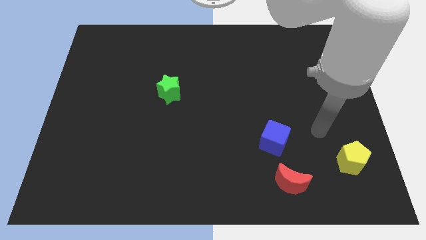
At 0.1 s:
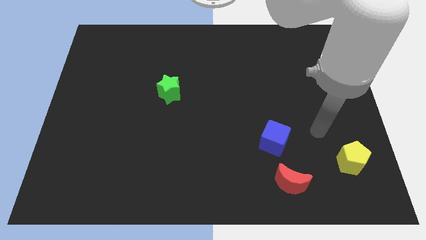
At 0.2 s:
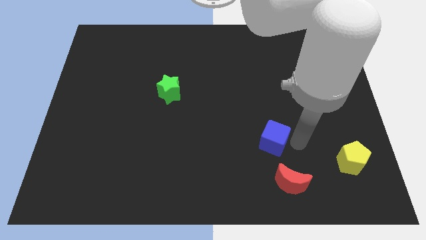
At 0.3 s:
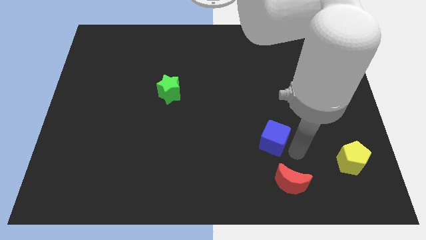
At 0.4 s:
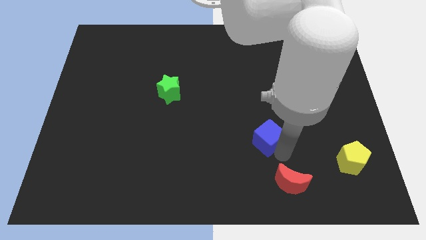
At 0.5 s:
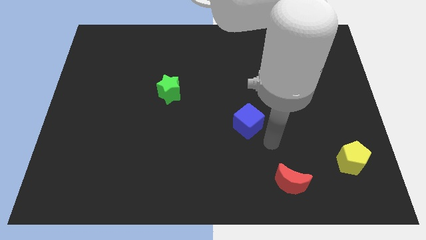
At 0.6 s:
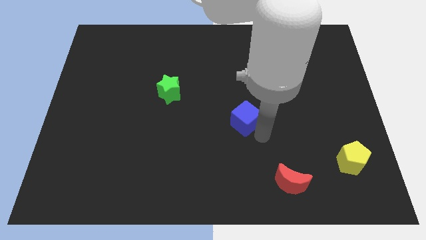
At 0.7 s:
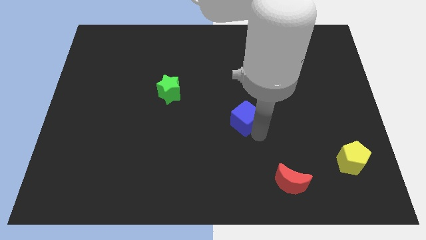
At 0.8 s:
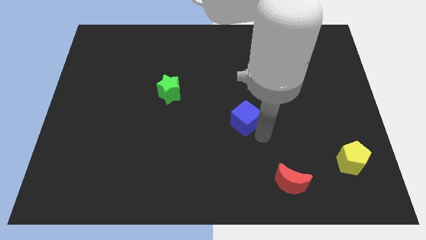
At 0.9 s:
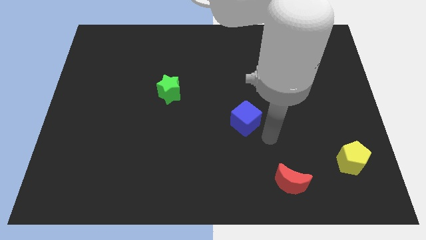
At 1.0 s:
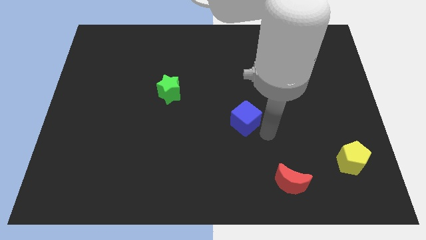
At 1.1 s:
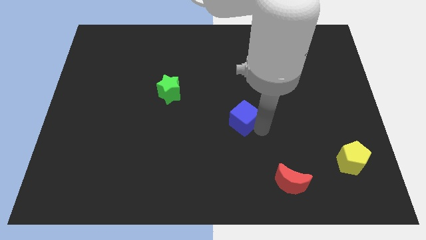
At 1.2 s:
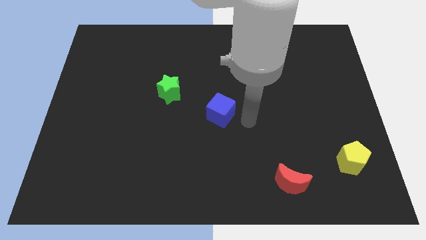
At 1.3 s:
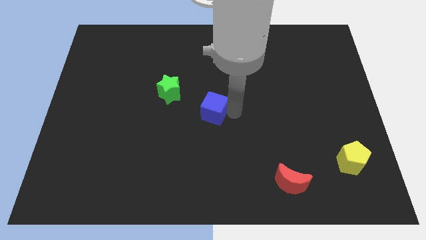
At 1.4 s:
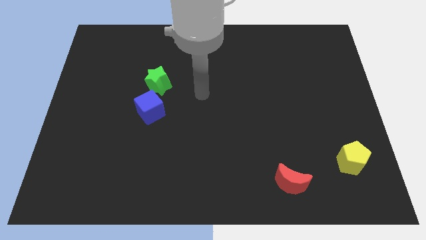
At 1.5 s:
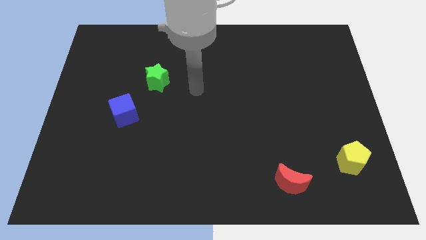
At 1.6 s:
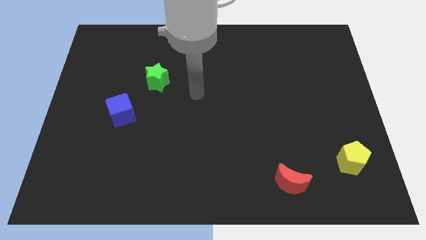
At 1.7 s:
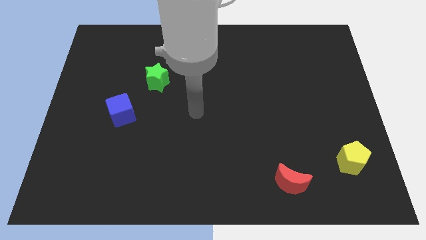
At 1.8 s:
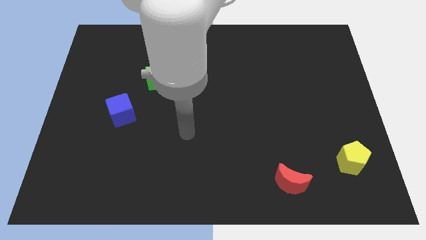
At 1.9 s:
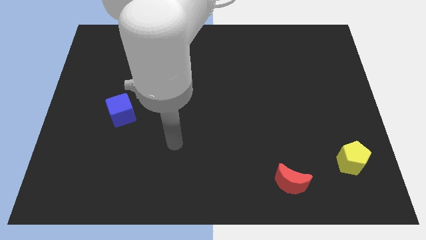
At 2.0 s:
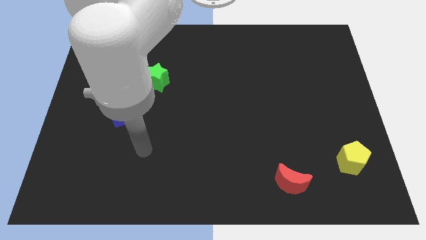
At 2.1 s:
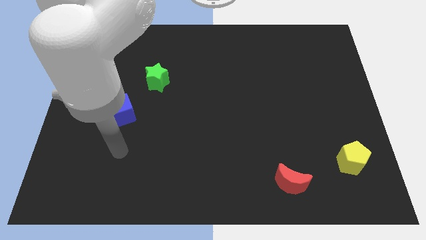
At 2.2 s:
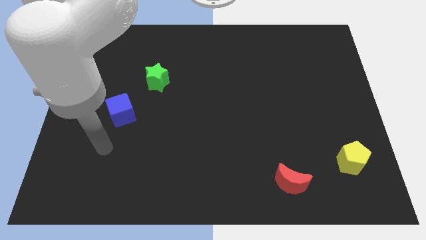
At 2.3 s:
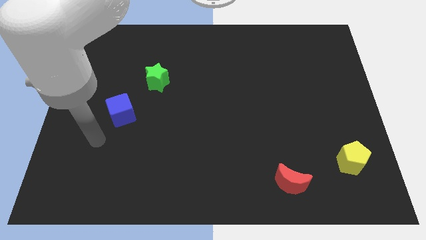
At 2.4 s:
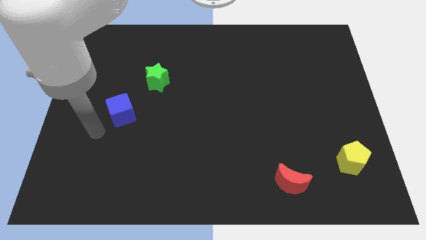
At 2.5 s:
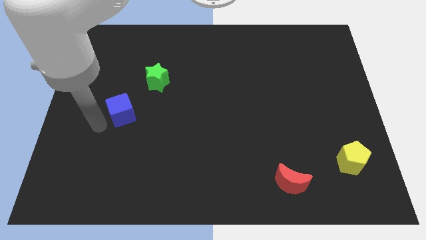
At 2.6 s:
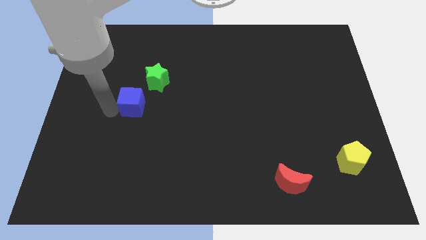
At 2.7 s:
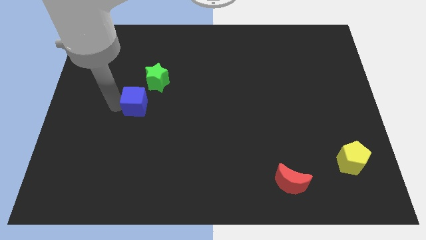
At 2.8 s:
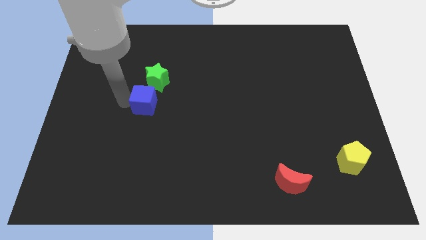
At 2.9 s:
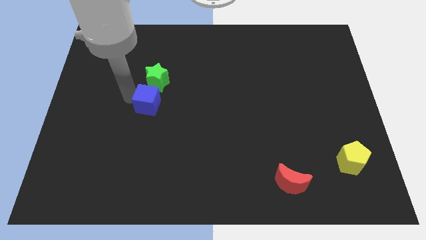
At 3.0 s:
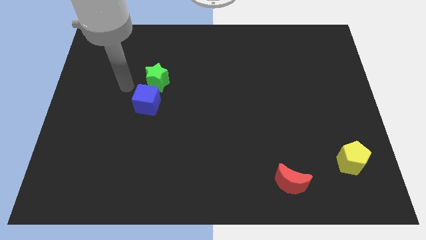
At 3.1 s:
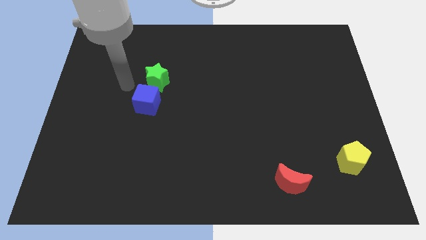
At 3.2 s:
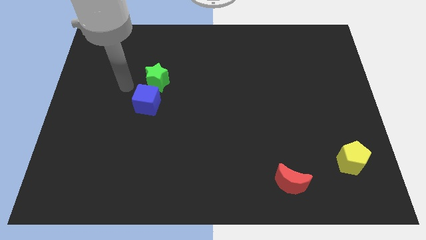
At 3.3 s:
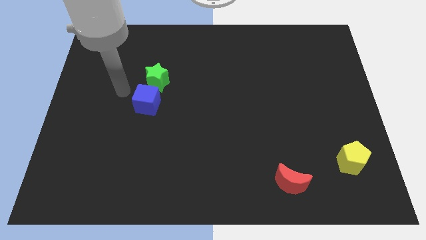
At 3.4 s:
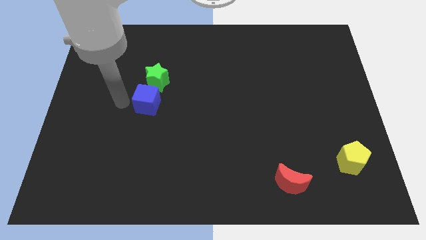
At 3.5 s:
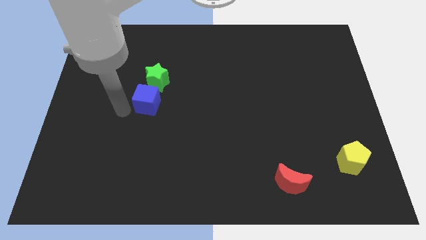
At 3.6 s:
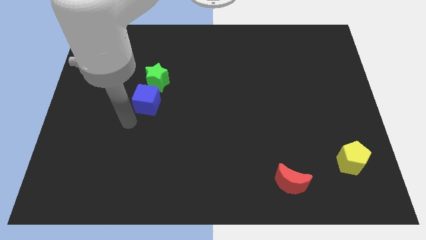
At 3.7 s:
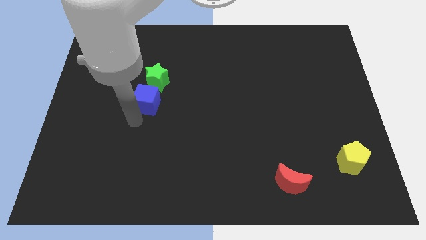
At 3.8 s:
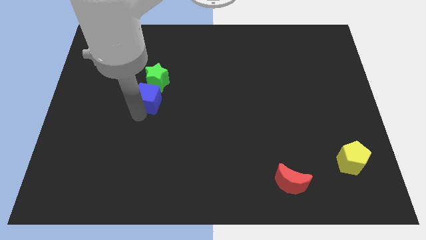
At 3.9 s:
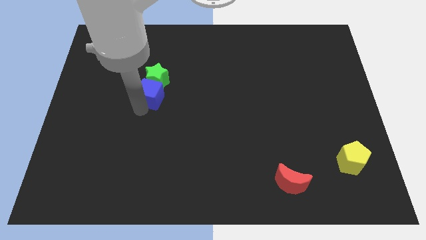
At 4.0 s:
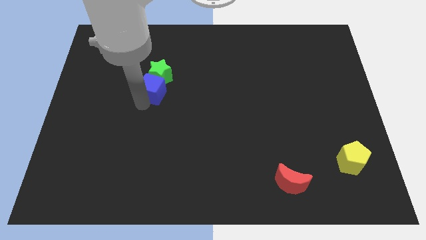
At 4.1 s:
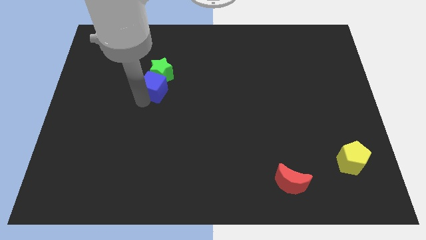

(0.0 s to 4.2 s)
slide the cube towards the star

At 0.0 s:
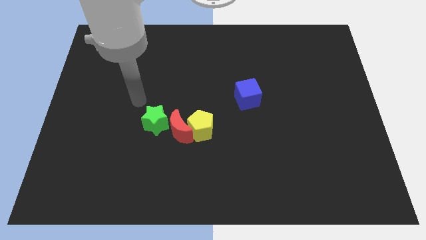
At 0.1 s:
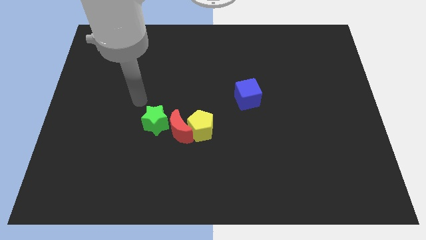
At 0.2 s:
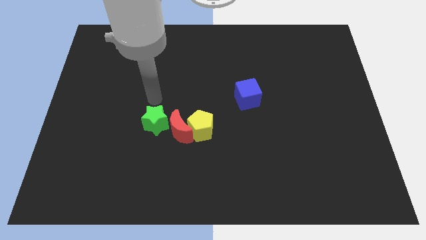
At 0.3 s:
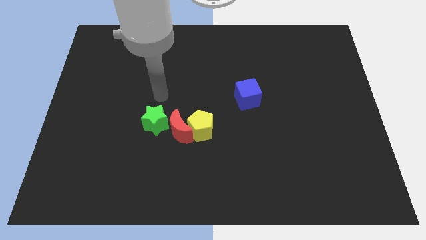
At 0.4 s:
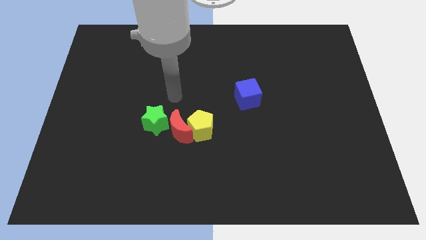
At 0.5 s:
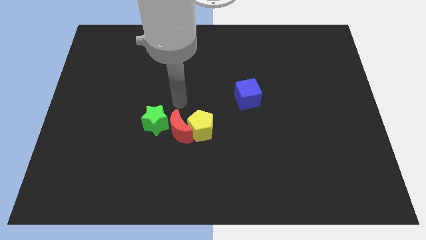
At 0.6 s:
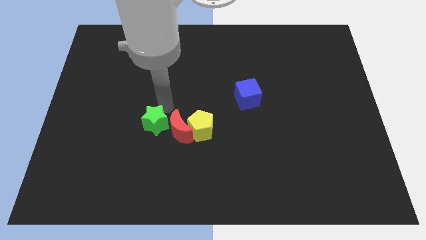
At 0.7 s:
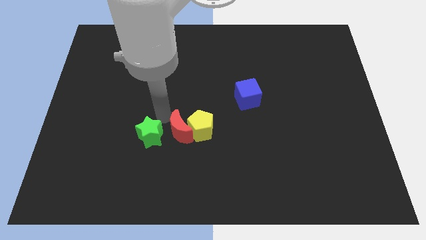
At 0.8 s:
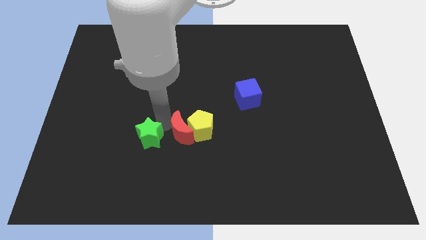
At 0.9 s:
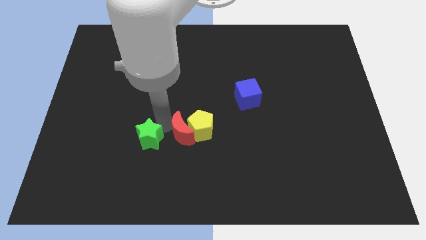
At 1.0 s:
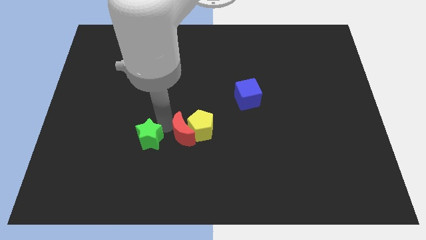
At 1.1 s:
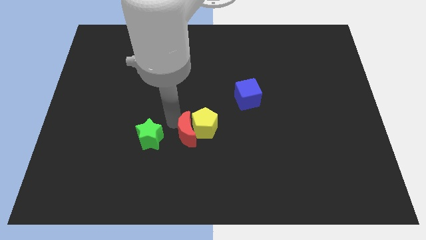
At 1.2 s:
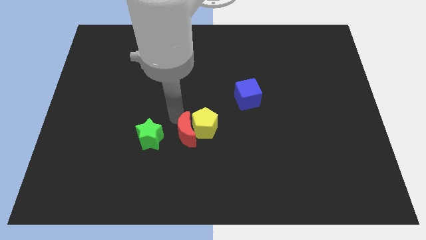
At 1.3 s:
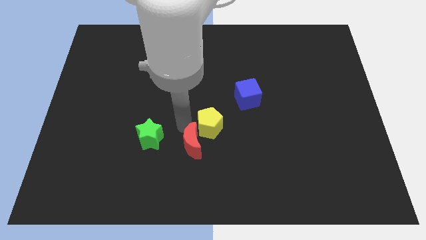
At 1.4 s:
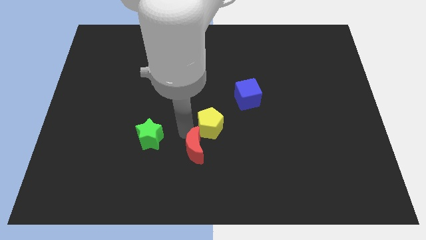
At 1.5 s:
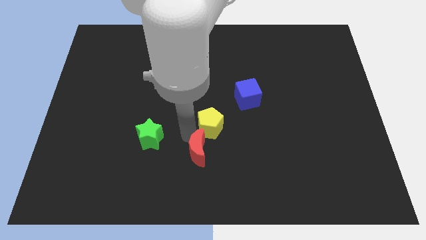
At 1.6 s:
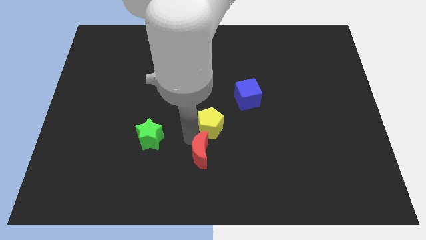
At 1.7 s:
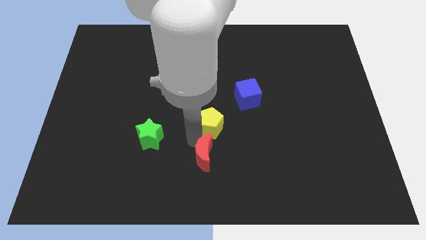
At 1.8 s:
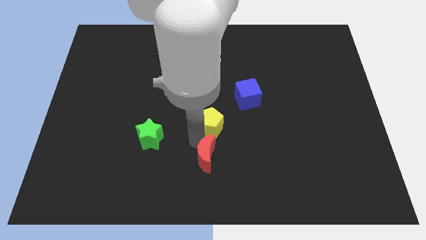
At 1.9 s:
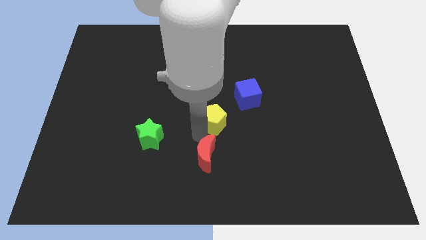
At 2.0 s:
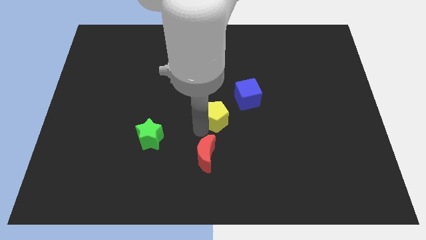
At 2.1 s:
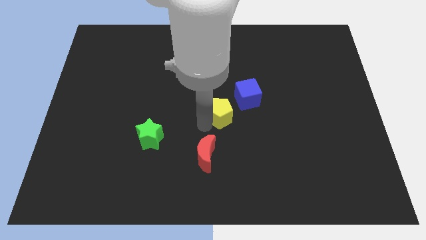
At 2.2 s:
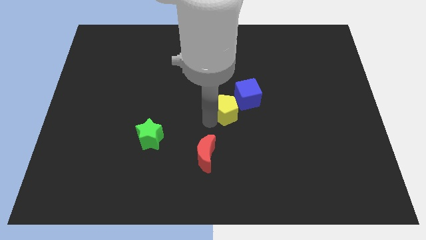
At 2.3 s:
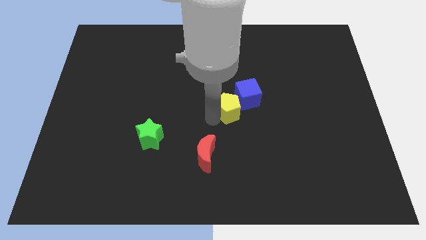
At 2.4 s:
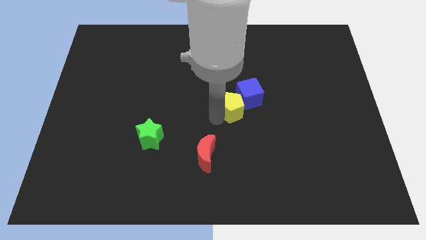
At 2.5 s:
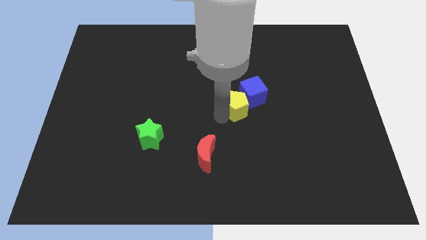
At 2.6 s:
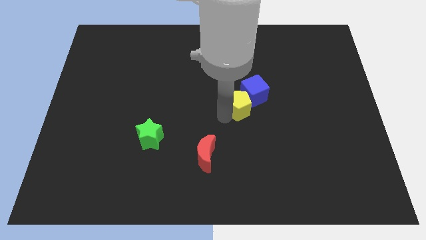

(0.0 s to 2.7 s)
push the yellow block next to the cube

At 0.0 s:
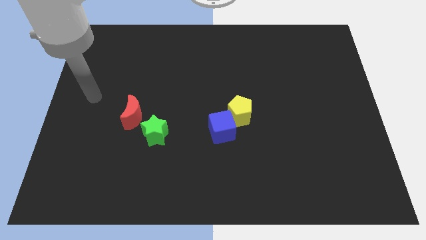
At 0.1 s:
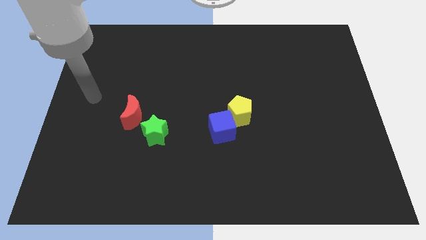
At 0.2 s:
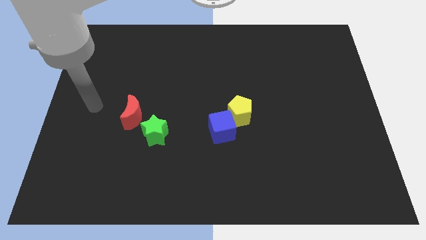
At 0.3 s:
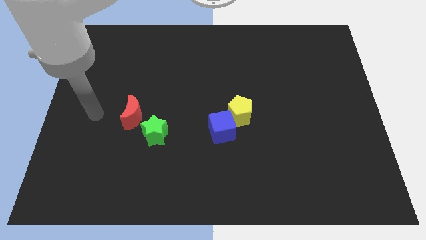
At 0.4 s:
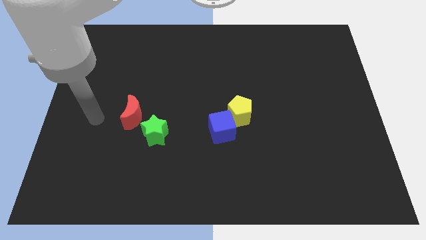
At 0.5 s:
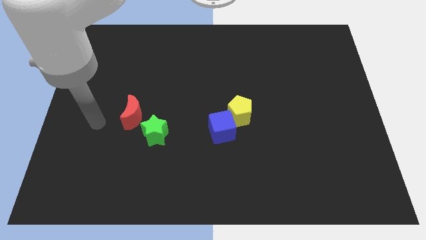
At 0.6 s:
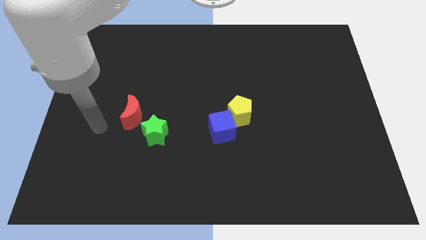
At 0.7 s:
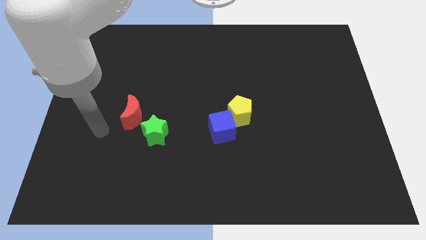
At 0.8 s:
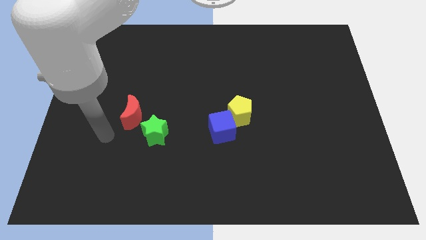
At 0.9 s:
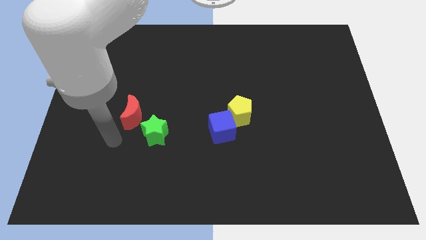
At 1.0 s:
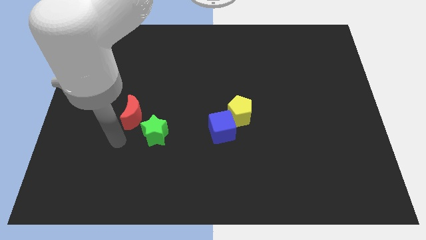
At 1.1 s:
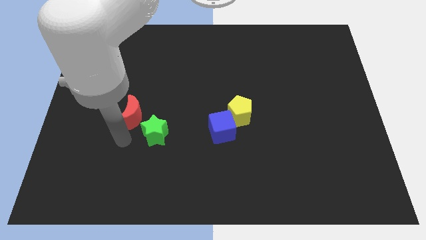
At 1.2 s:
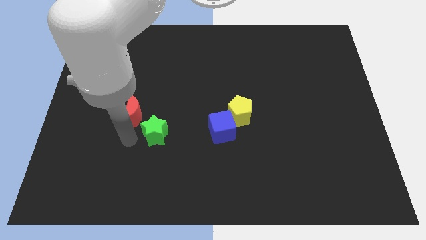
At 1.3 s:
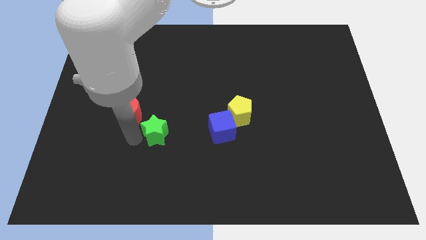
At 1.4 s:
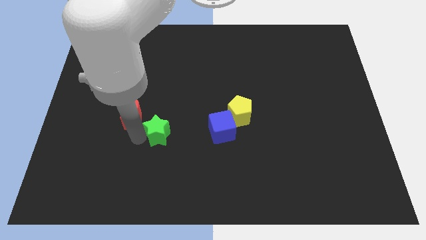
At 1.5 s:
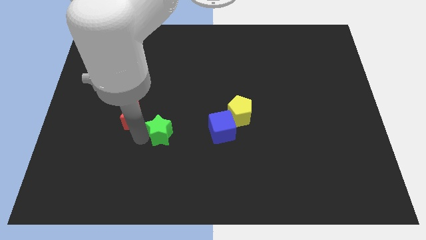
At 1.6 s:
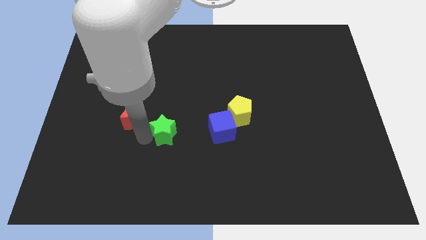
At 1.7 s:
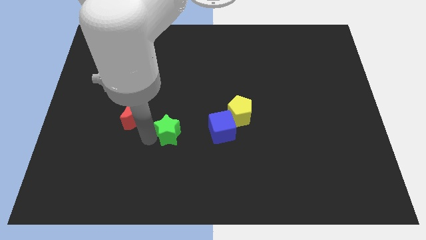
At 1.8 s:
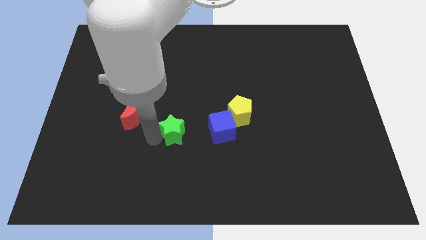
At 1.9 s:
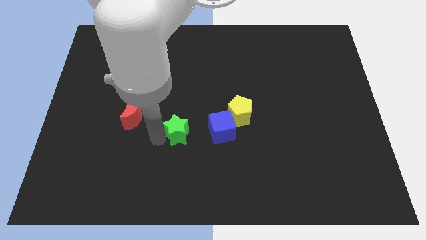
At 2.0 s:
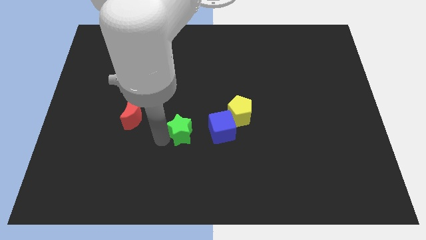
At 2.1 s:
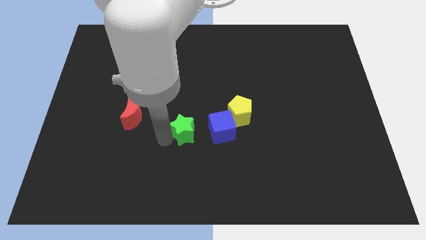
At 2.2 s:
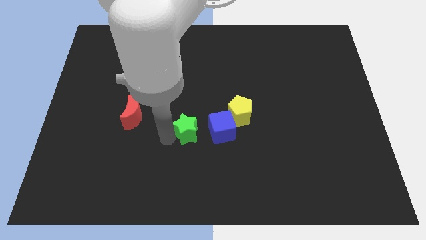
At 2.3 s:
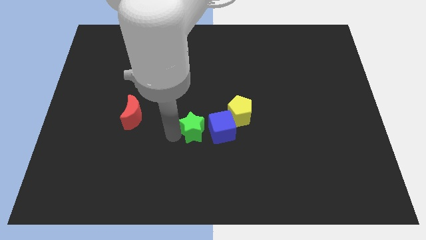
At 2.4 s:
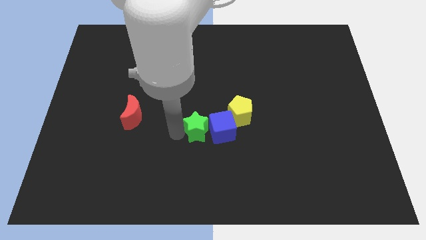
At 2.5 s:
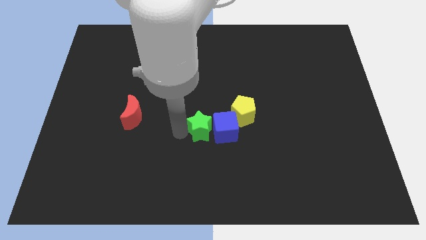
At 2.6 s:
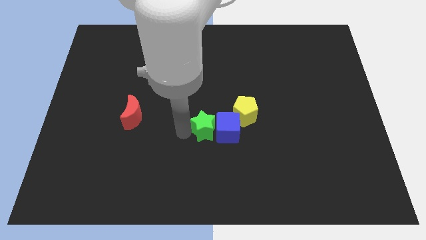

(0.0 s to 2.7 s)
push the green star close to the cube
